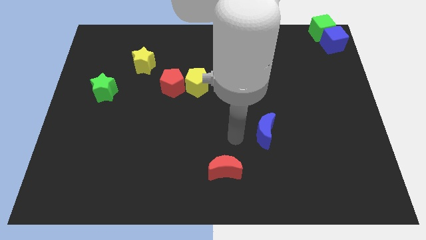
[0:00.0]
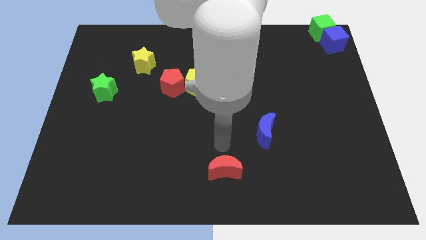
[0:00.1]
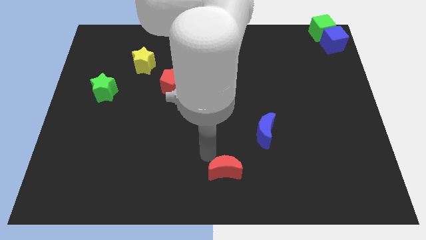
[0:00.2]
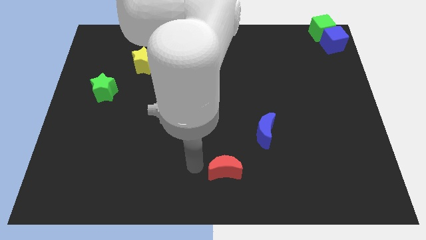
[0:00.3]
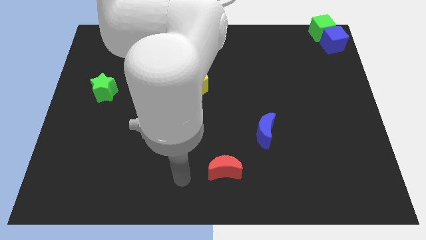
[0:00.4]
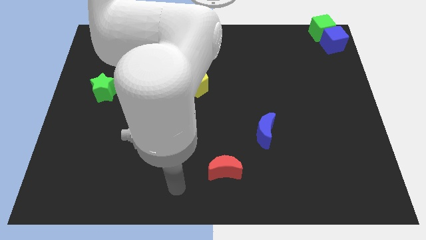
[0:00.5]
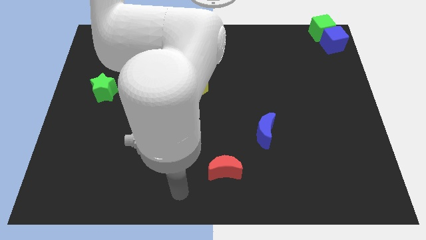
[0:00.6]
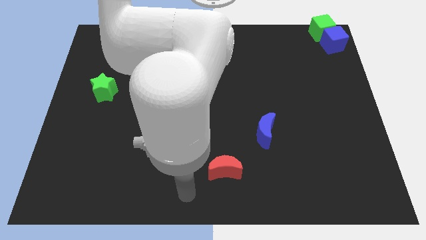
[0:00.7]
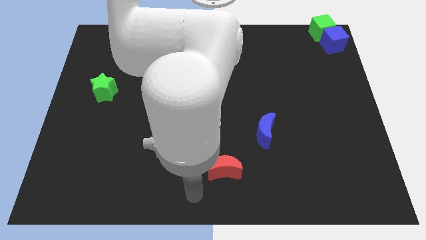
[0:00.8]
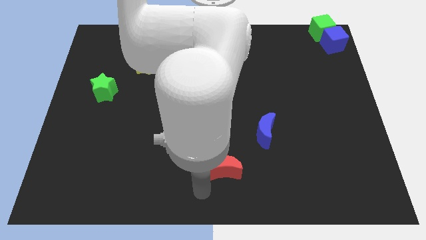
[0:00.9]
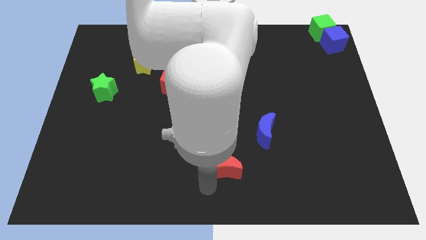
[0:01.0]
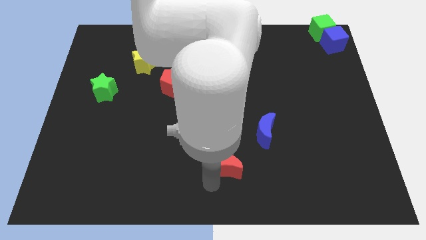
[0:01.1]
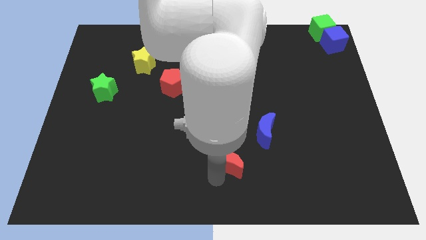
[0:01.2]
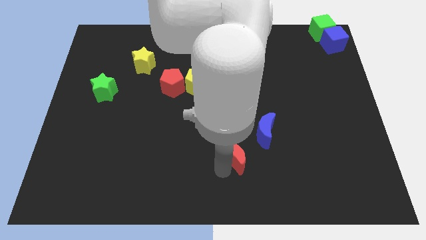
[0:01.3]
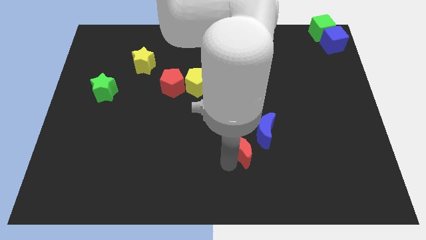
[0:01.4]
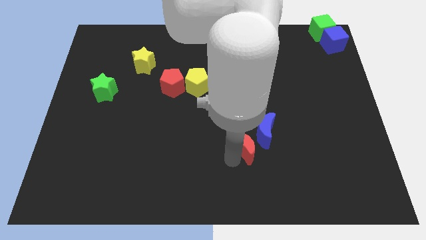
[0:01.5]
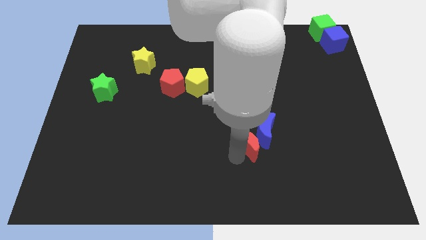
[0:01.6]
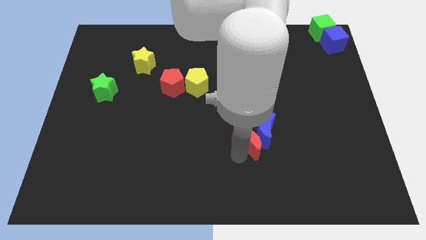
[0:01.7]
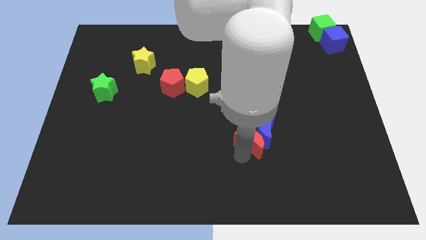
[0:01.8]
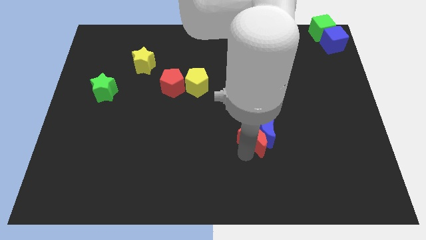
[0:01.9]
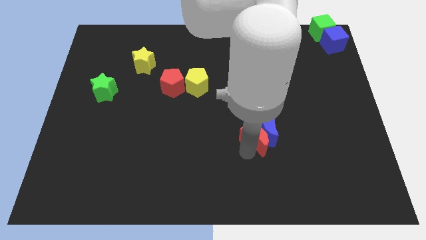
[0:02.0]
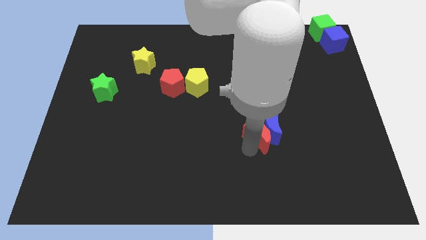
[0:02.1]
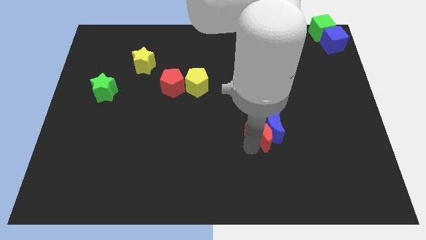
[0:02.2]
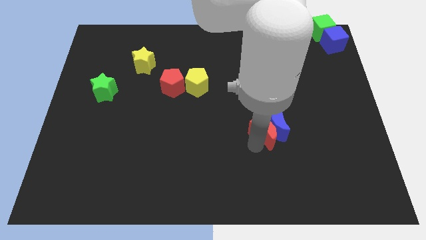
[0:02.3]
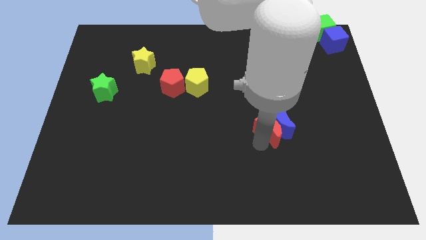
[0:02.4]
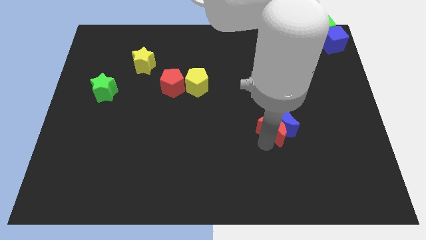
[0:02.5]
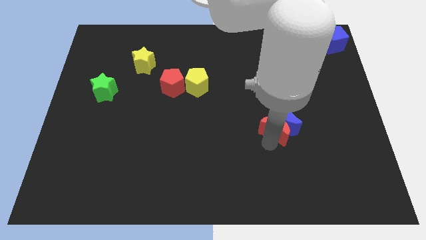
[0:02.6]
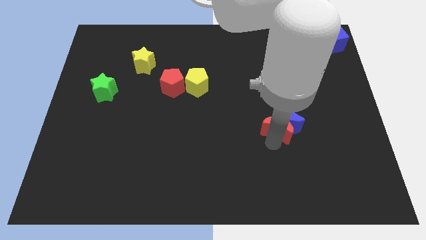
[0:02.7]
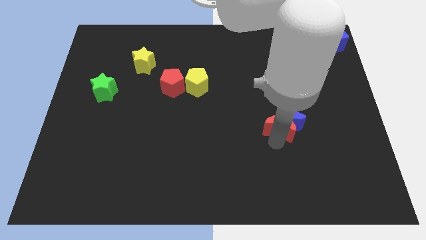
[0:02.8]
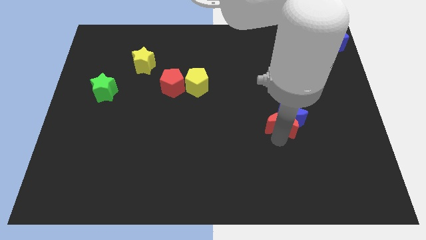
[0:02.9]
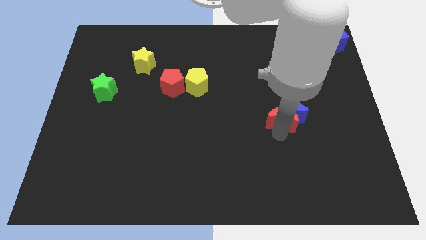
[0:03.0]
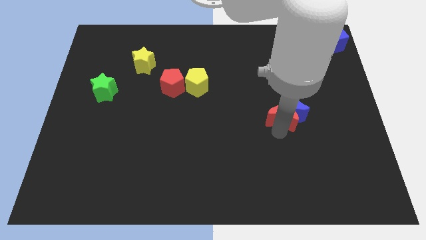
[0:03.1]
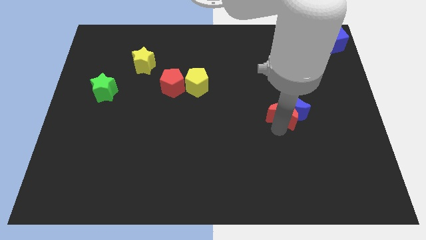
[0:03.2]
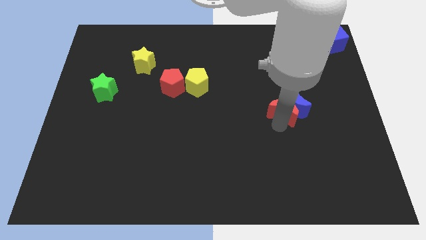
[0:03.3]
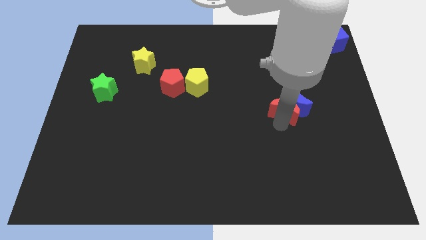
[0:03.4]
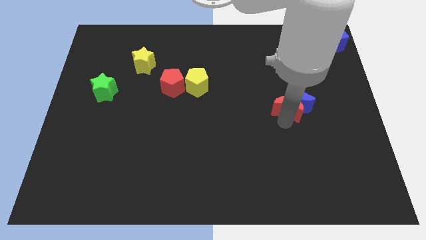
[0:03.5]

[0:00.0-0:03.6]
move red moon and blue moon to center right

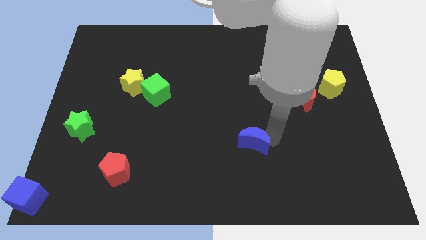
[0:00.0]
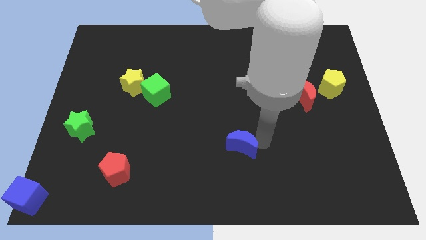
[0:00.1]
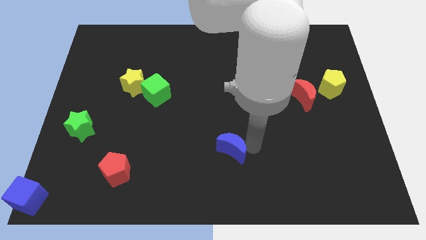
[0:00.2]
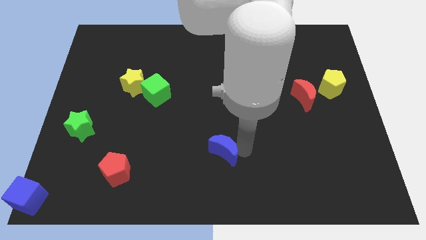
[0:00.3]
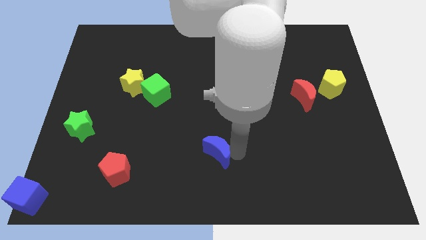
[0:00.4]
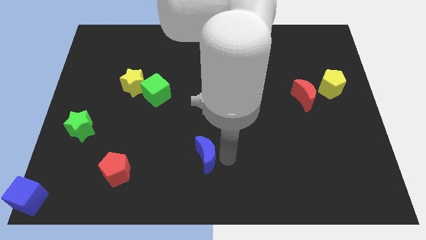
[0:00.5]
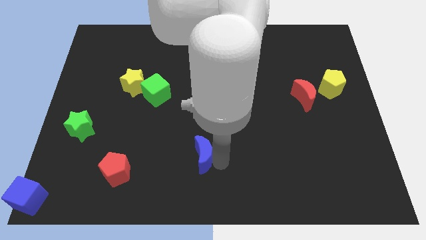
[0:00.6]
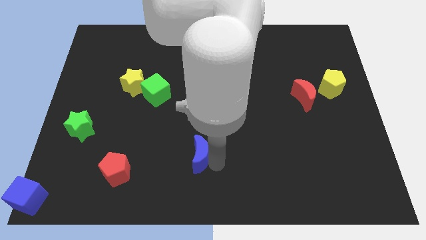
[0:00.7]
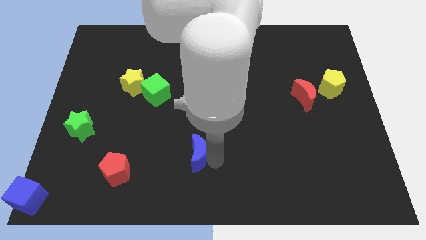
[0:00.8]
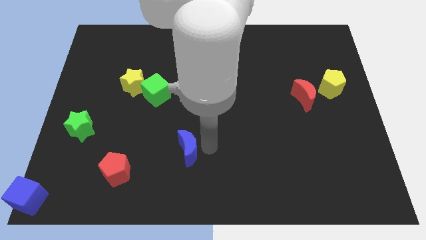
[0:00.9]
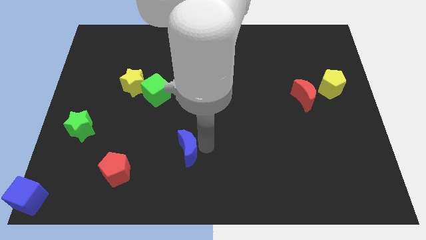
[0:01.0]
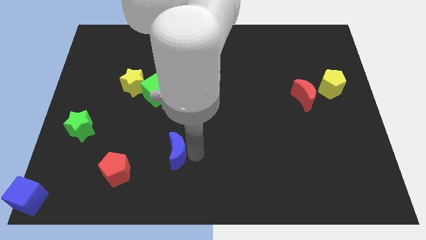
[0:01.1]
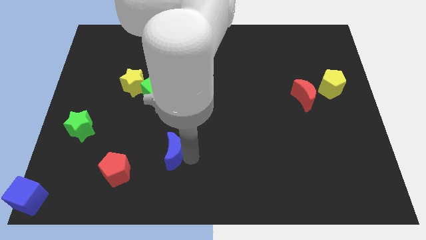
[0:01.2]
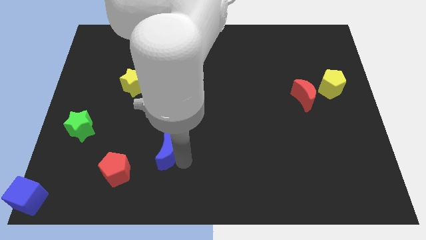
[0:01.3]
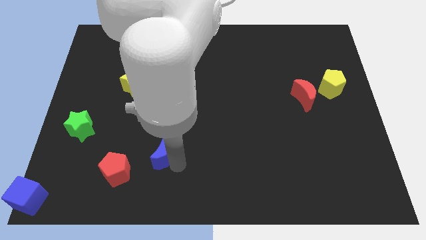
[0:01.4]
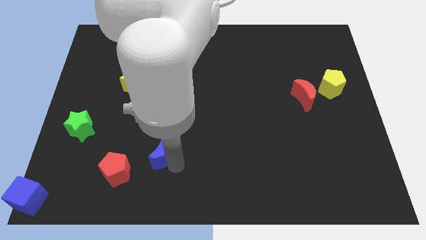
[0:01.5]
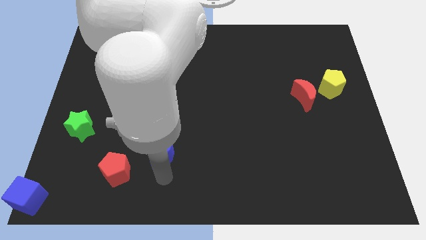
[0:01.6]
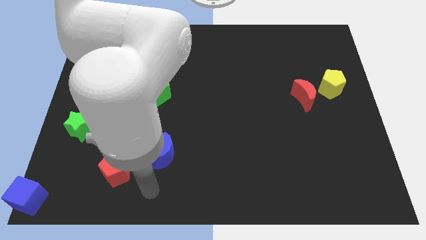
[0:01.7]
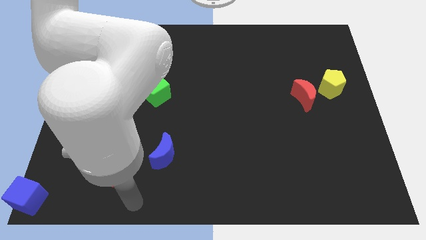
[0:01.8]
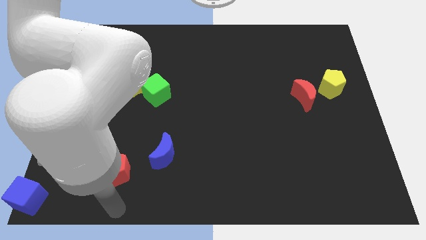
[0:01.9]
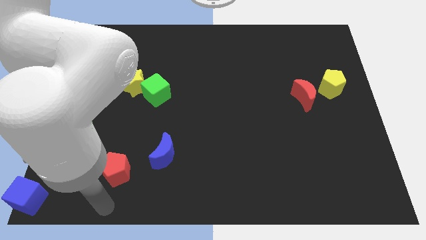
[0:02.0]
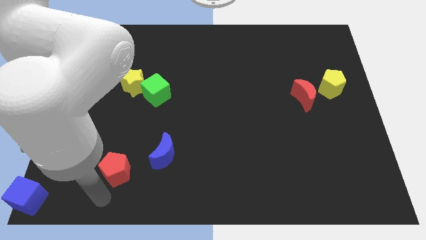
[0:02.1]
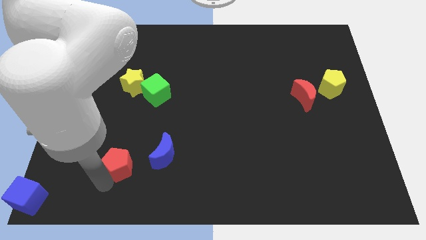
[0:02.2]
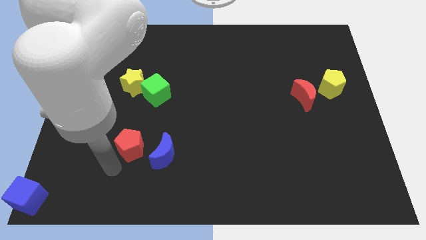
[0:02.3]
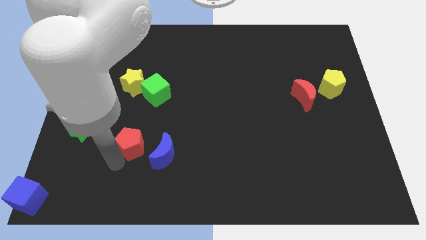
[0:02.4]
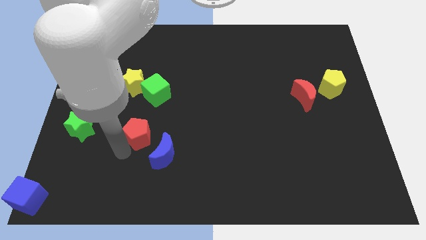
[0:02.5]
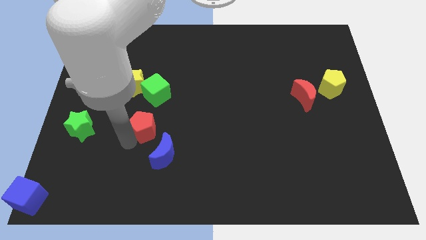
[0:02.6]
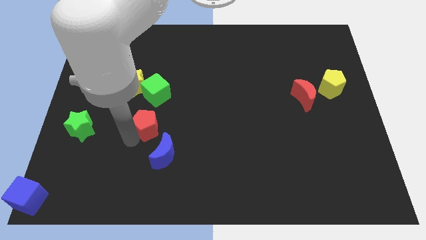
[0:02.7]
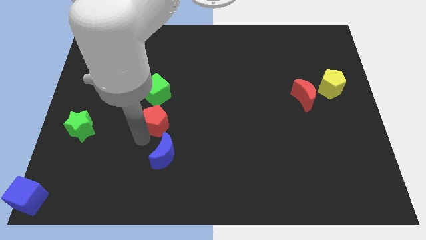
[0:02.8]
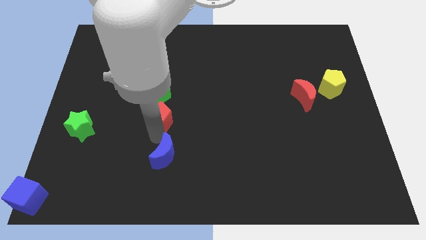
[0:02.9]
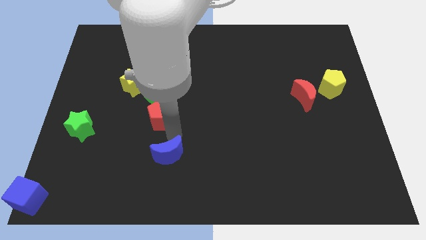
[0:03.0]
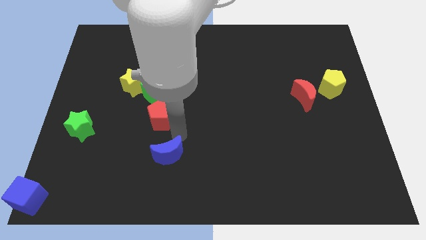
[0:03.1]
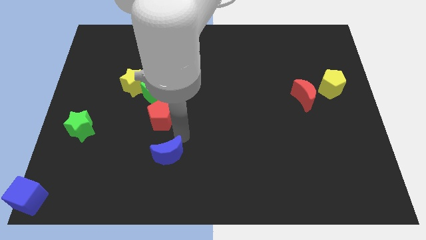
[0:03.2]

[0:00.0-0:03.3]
place red pentagon blue moon vertically below green cube

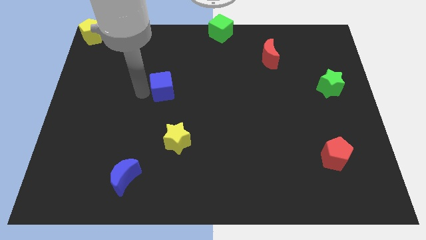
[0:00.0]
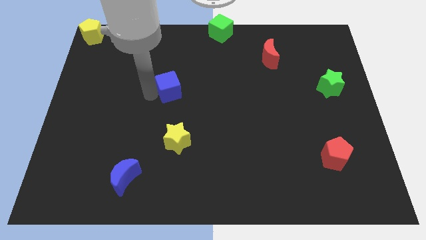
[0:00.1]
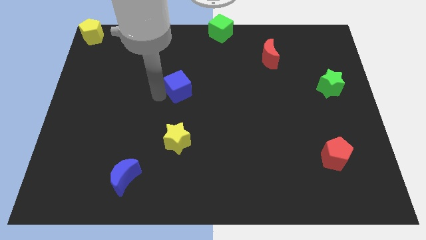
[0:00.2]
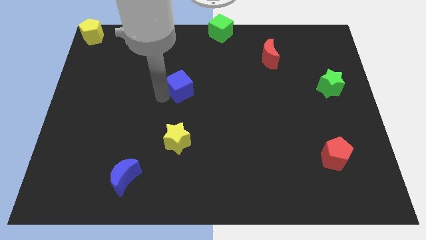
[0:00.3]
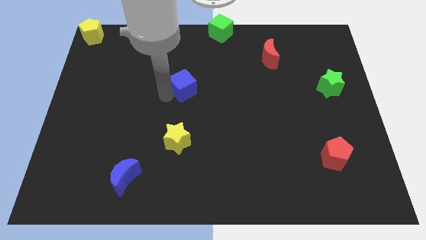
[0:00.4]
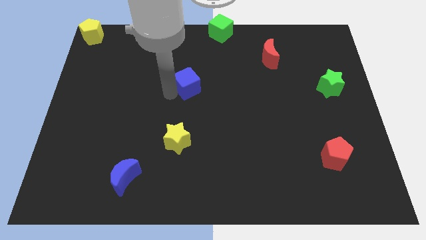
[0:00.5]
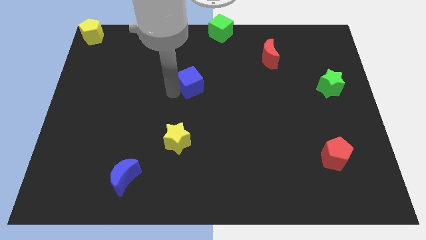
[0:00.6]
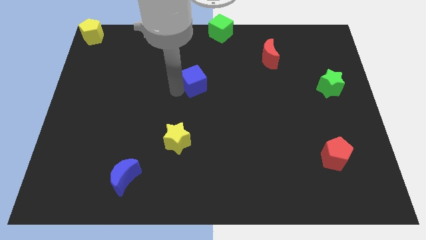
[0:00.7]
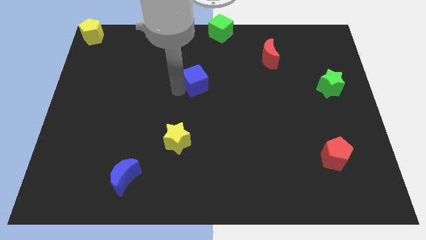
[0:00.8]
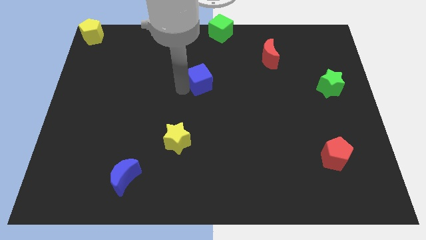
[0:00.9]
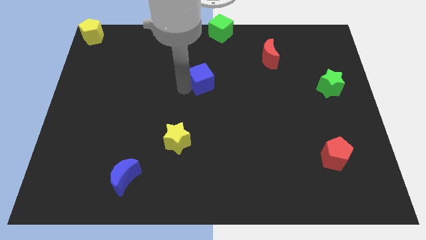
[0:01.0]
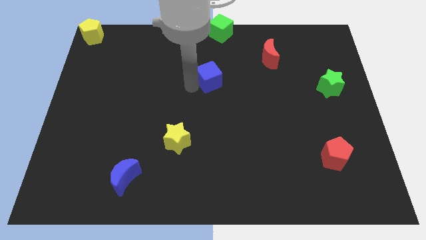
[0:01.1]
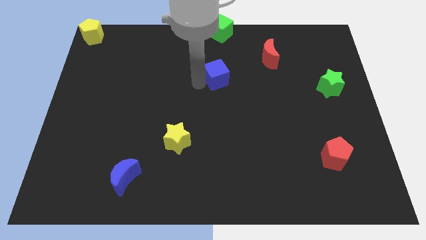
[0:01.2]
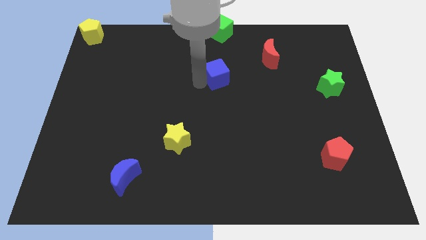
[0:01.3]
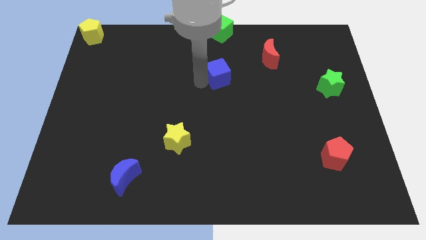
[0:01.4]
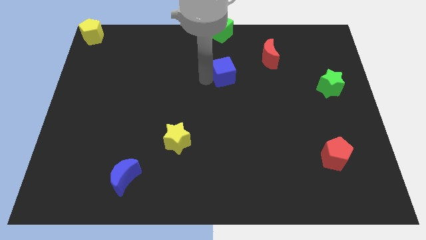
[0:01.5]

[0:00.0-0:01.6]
push blue cube below green cube

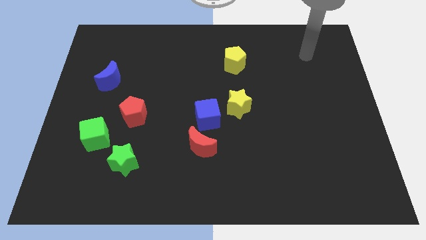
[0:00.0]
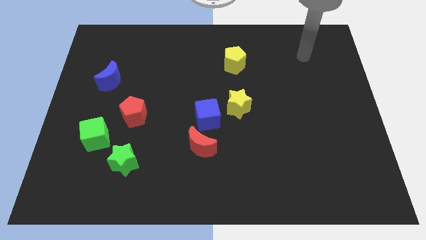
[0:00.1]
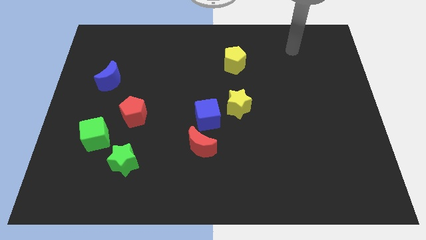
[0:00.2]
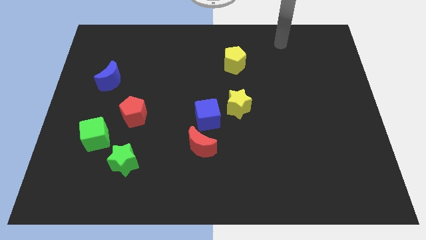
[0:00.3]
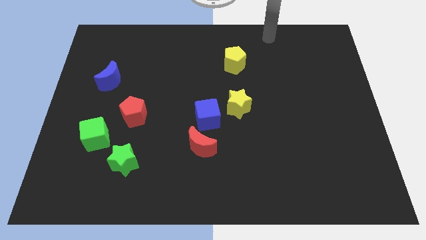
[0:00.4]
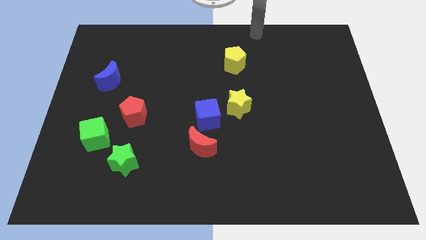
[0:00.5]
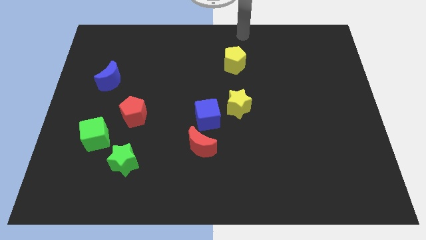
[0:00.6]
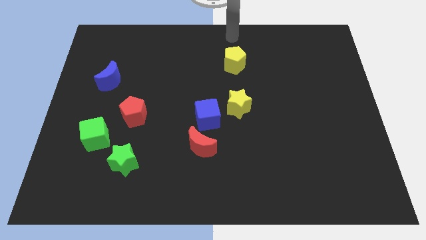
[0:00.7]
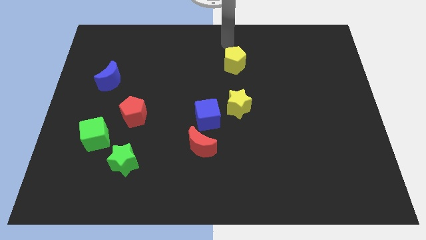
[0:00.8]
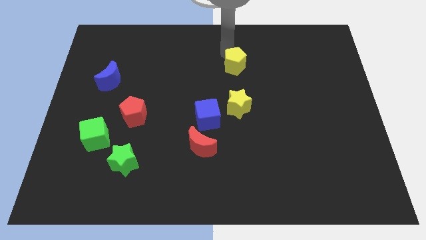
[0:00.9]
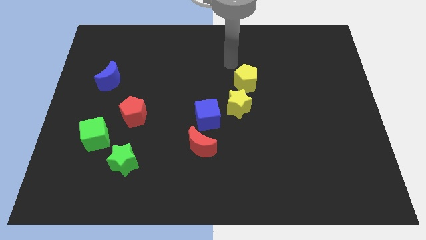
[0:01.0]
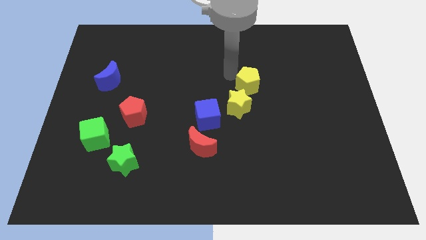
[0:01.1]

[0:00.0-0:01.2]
move your arm close to the yellow pentagon
